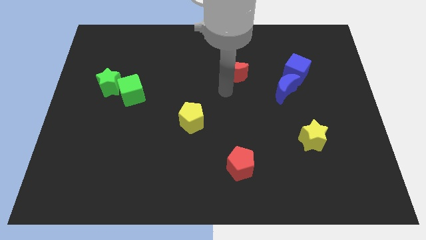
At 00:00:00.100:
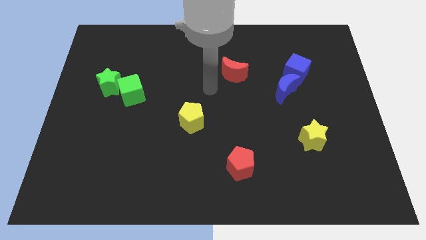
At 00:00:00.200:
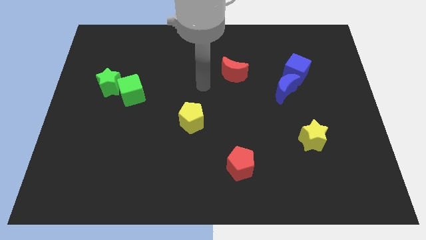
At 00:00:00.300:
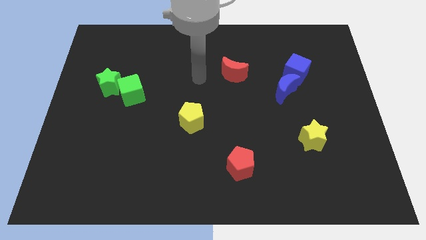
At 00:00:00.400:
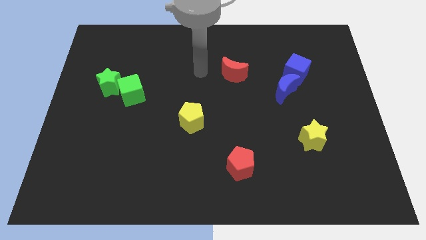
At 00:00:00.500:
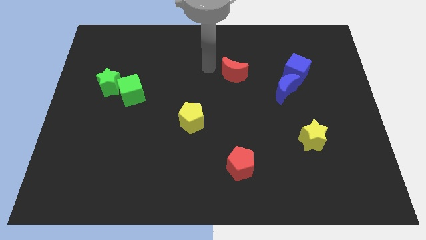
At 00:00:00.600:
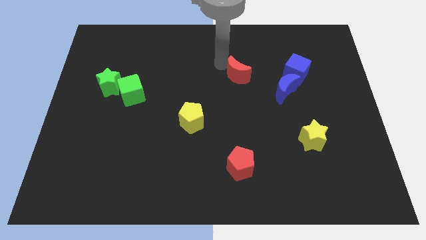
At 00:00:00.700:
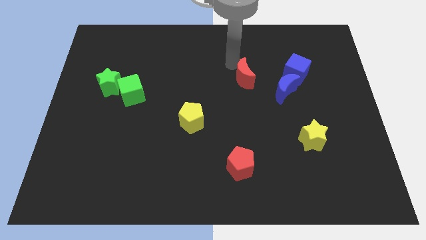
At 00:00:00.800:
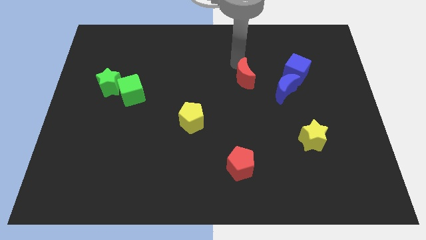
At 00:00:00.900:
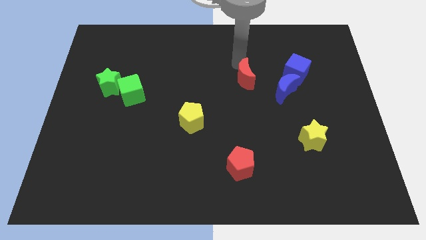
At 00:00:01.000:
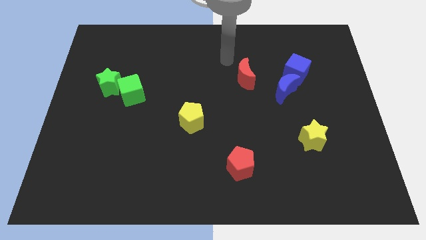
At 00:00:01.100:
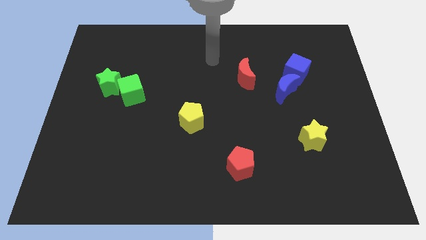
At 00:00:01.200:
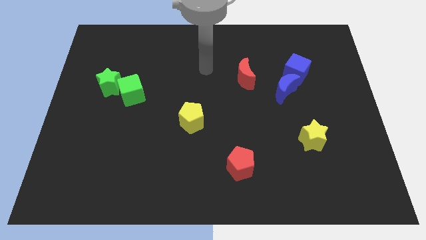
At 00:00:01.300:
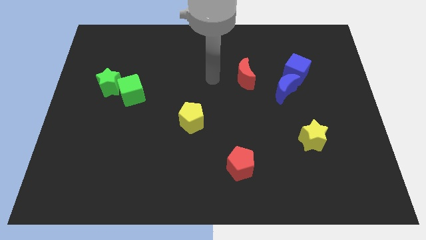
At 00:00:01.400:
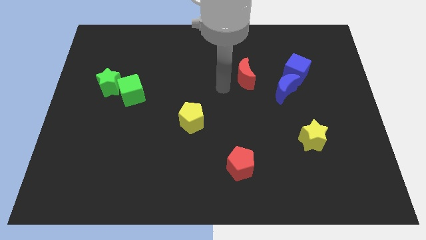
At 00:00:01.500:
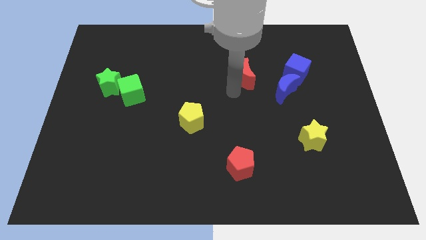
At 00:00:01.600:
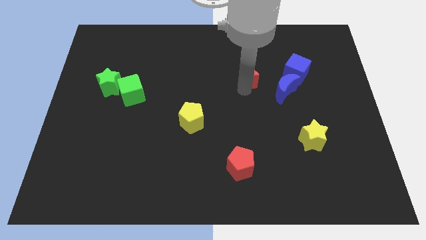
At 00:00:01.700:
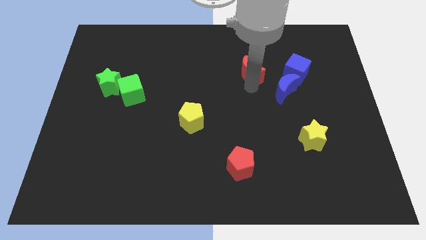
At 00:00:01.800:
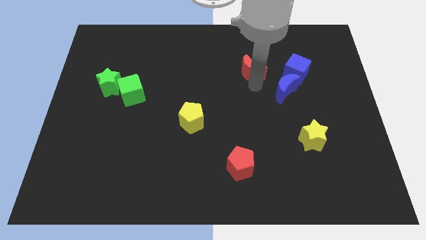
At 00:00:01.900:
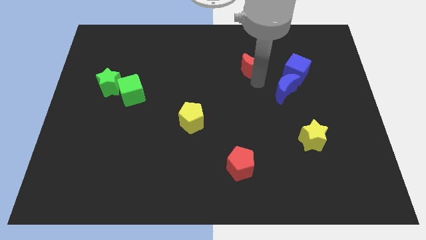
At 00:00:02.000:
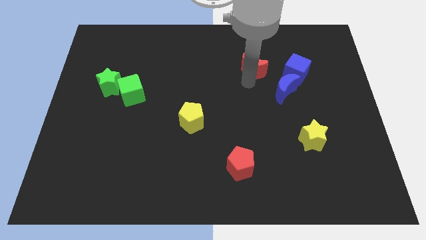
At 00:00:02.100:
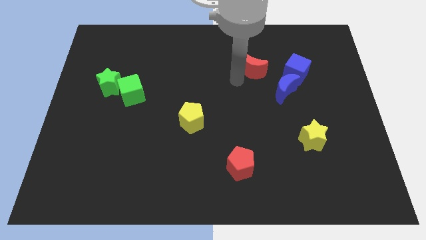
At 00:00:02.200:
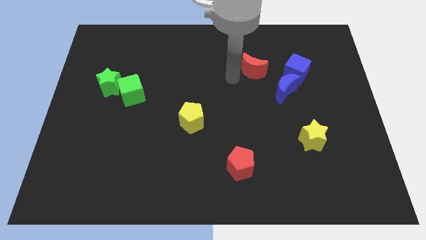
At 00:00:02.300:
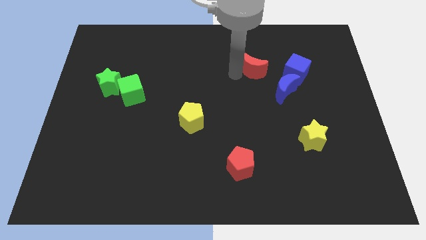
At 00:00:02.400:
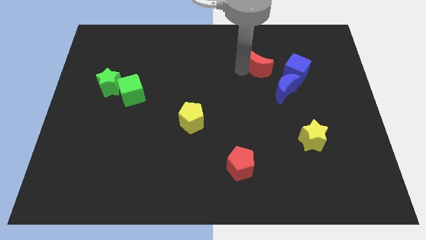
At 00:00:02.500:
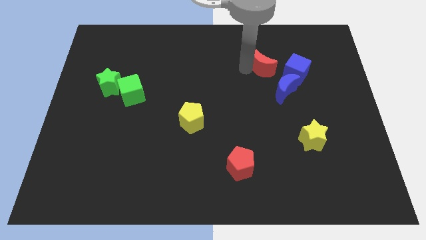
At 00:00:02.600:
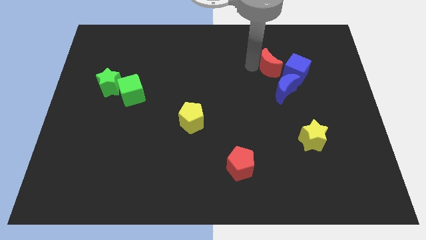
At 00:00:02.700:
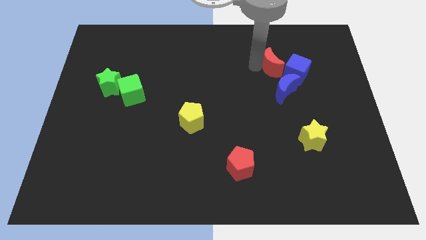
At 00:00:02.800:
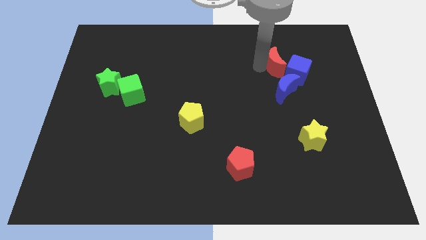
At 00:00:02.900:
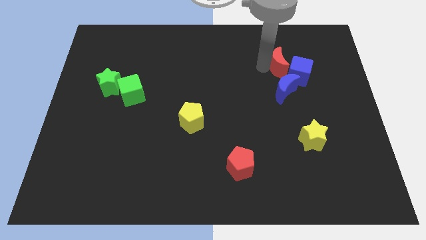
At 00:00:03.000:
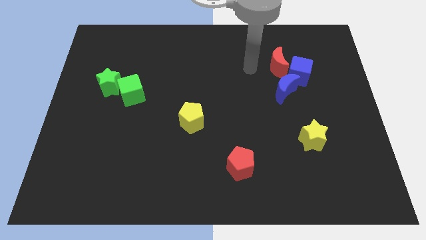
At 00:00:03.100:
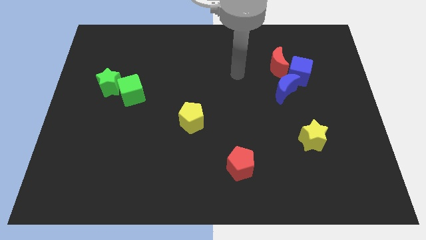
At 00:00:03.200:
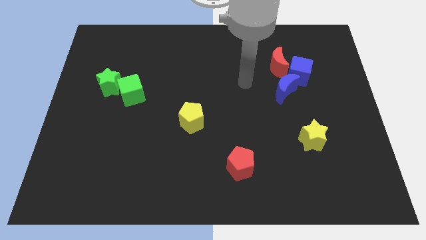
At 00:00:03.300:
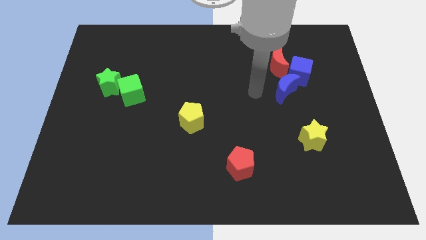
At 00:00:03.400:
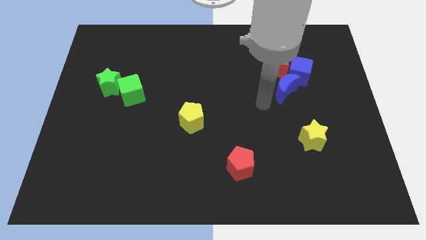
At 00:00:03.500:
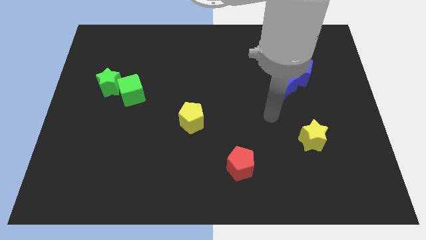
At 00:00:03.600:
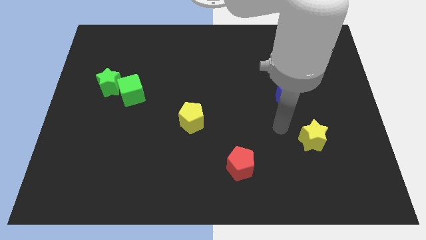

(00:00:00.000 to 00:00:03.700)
move red moon into the blue cube

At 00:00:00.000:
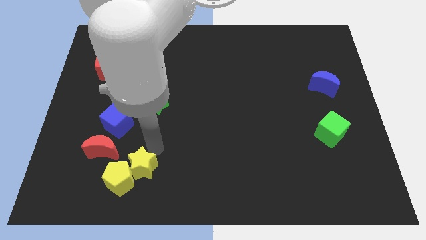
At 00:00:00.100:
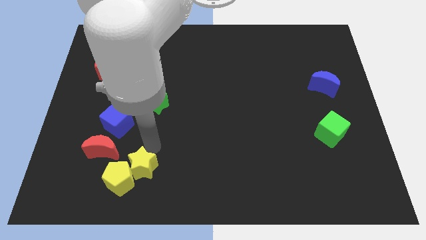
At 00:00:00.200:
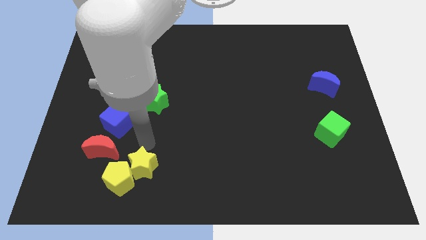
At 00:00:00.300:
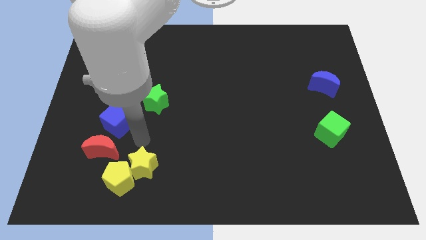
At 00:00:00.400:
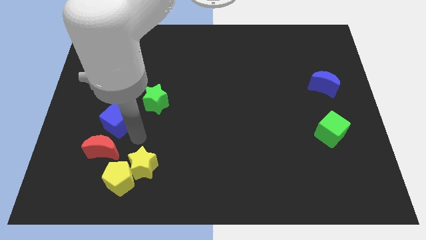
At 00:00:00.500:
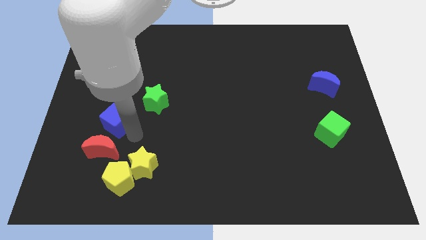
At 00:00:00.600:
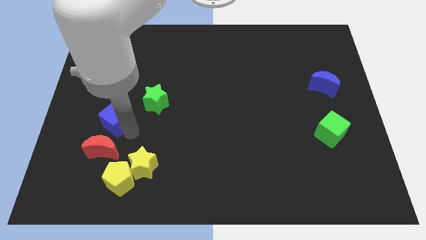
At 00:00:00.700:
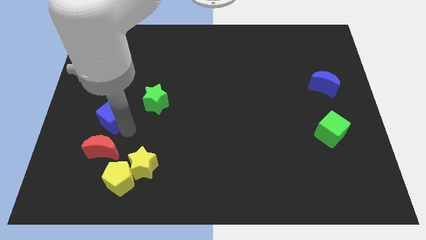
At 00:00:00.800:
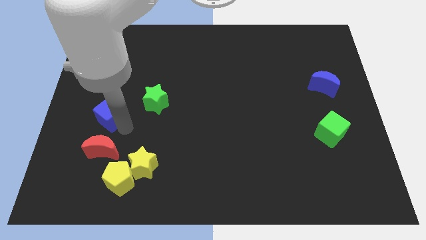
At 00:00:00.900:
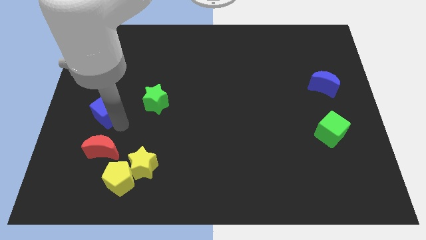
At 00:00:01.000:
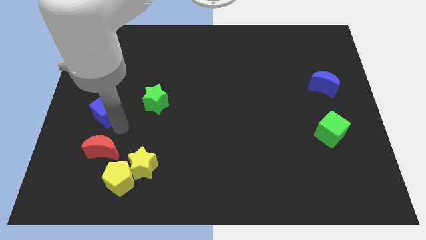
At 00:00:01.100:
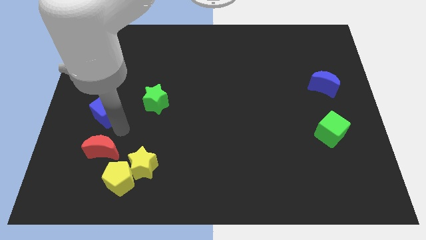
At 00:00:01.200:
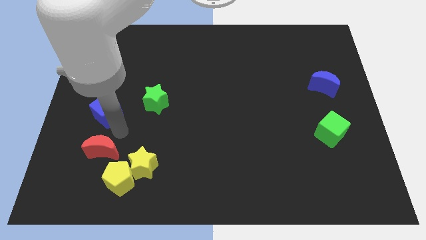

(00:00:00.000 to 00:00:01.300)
place the blue cube between red moon and red pentagon

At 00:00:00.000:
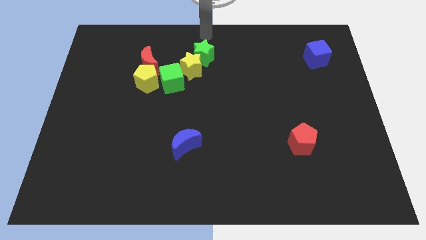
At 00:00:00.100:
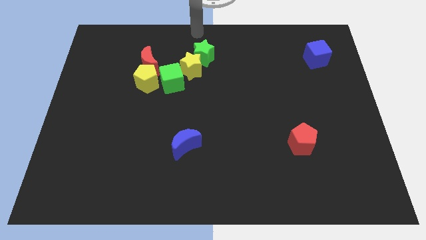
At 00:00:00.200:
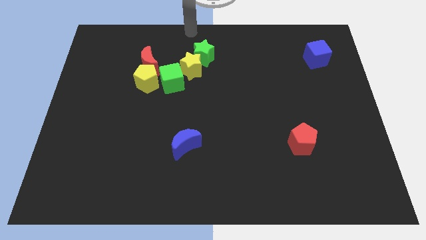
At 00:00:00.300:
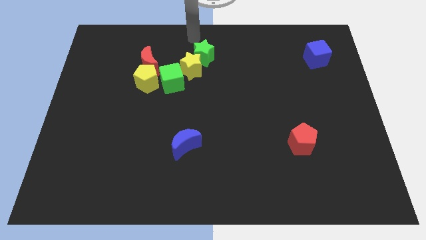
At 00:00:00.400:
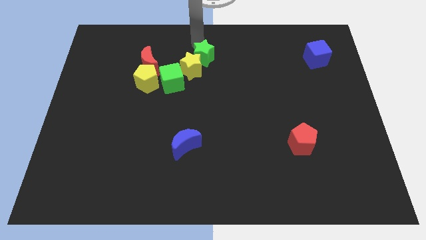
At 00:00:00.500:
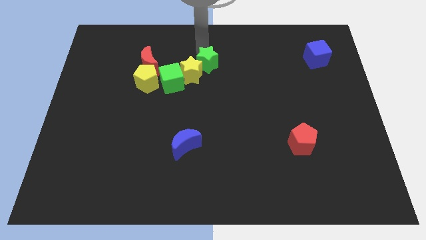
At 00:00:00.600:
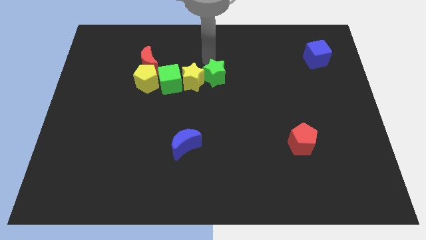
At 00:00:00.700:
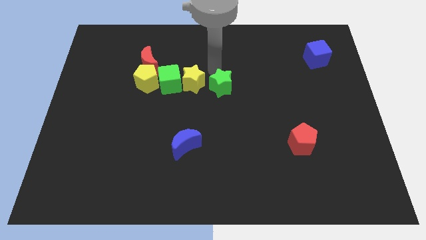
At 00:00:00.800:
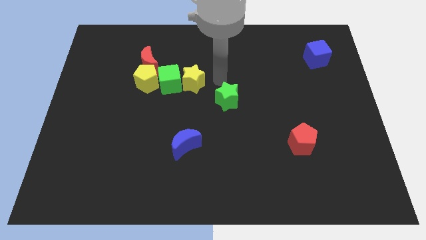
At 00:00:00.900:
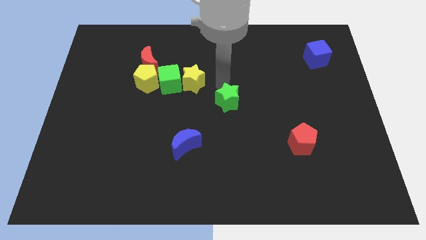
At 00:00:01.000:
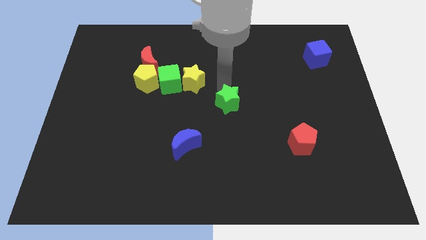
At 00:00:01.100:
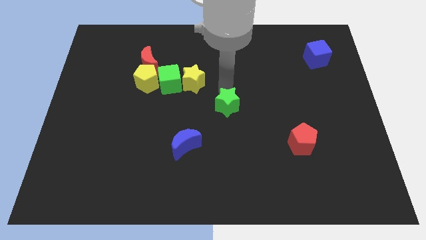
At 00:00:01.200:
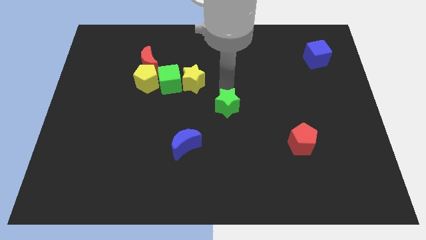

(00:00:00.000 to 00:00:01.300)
separate the yellow star and green star

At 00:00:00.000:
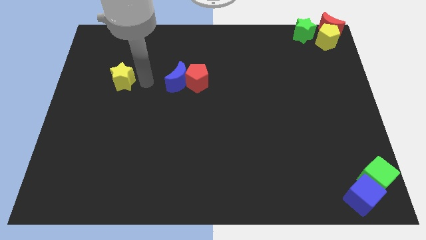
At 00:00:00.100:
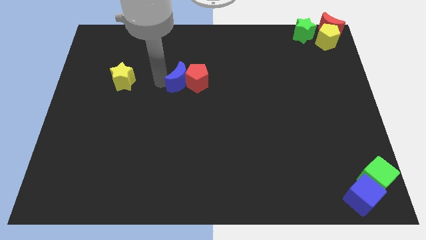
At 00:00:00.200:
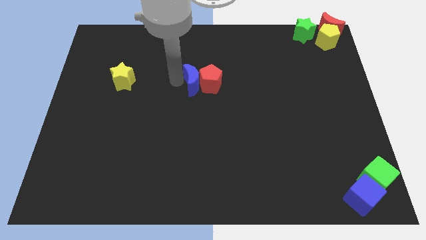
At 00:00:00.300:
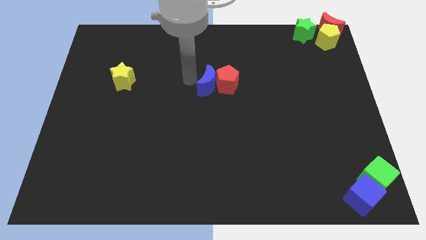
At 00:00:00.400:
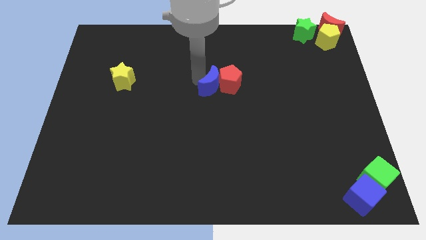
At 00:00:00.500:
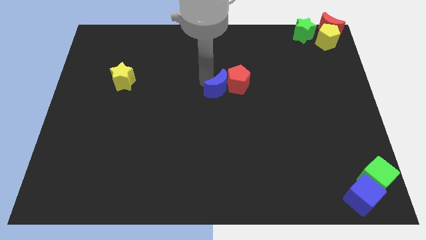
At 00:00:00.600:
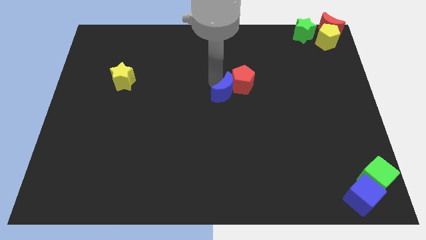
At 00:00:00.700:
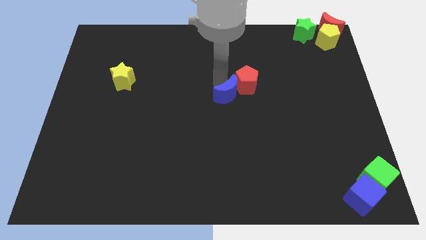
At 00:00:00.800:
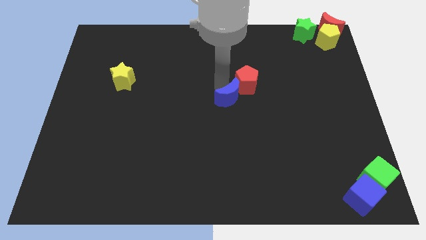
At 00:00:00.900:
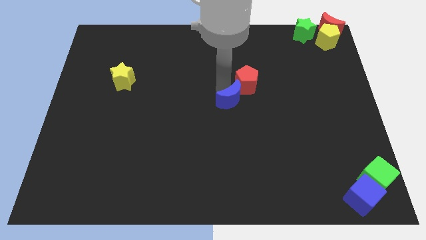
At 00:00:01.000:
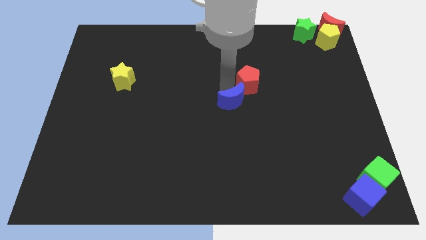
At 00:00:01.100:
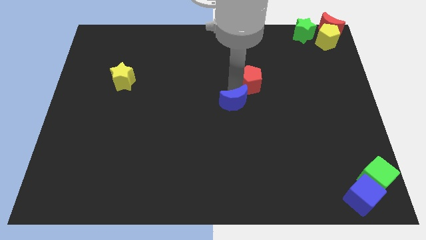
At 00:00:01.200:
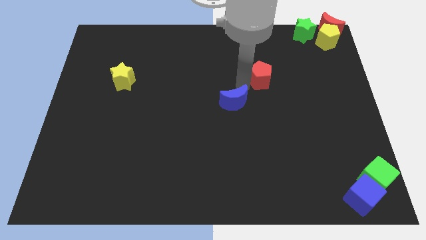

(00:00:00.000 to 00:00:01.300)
move the blue crescent and the red pentagon to the center of the board

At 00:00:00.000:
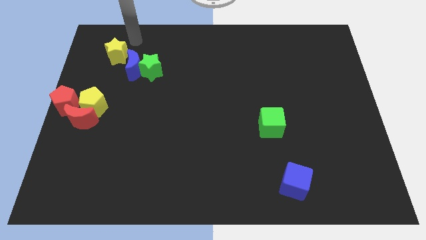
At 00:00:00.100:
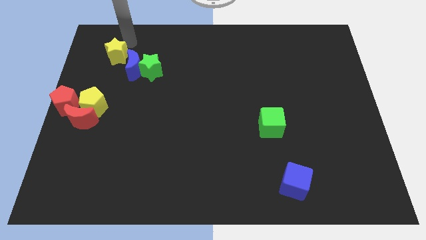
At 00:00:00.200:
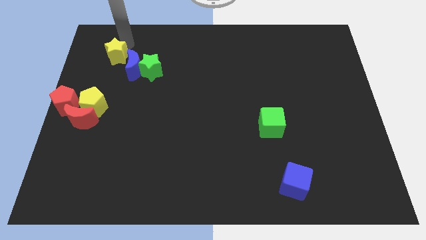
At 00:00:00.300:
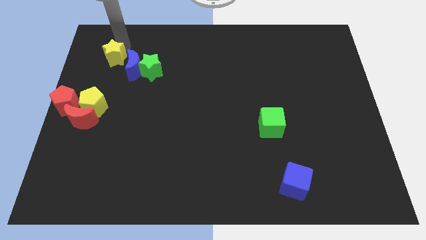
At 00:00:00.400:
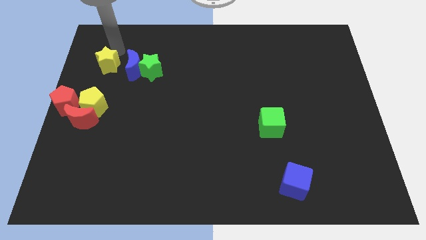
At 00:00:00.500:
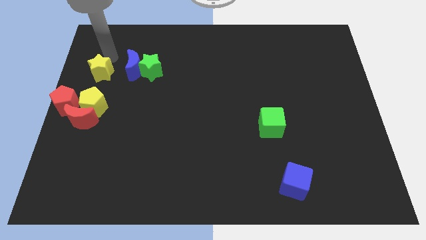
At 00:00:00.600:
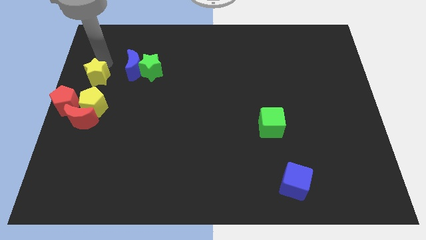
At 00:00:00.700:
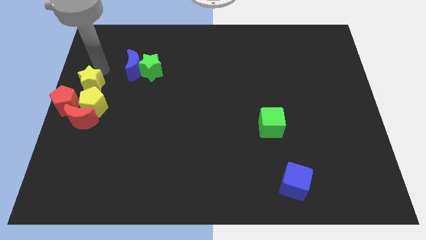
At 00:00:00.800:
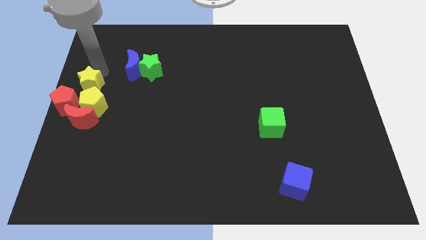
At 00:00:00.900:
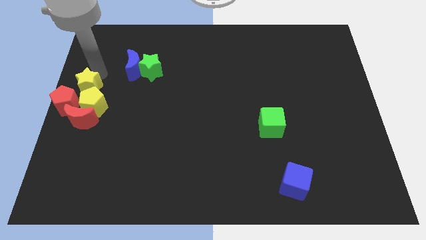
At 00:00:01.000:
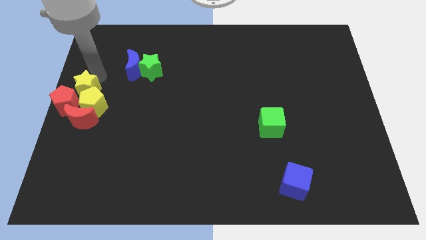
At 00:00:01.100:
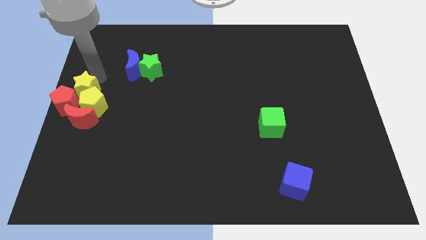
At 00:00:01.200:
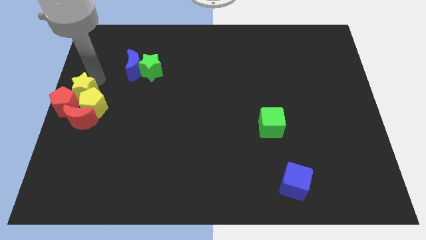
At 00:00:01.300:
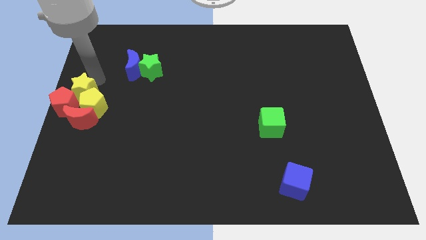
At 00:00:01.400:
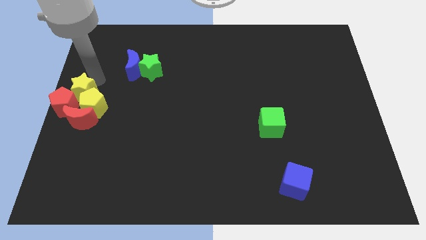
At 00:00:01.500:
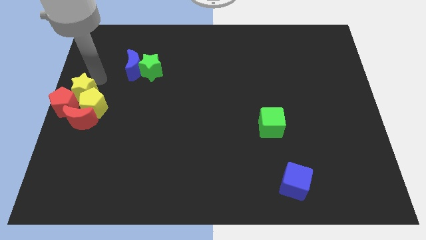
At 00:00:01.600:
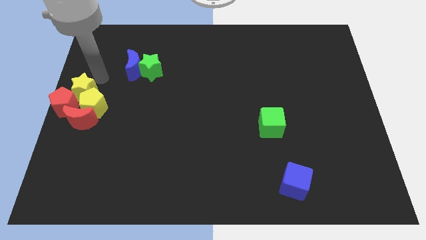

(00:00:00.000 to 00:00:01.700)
move the yellow star into the top side of the yellow and red pentagons
